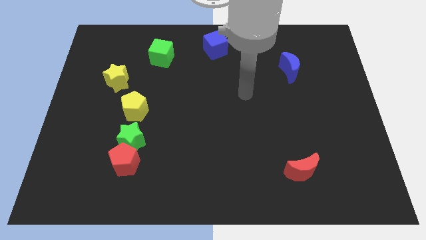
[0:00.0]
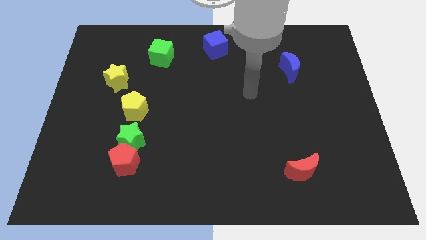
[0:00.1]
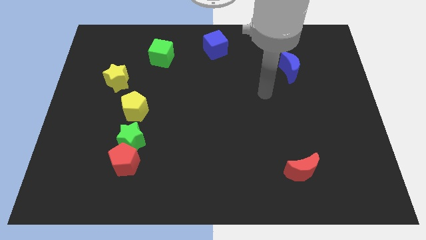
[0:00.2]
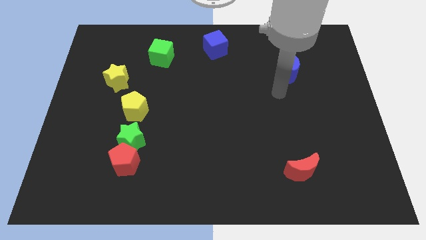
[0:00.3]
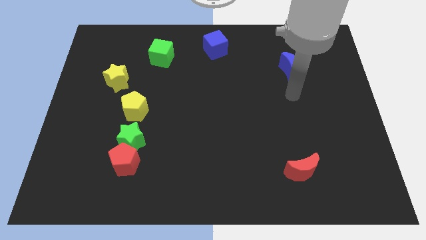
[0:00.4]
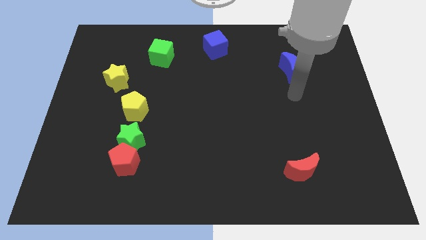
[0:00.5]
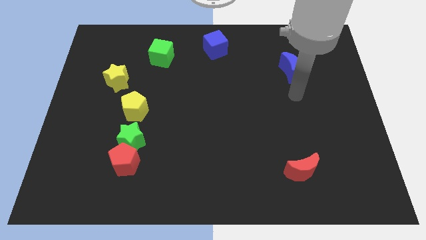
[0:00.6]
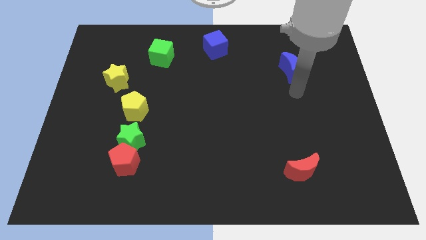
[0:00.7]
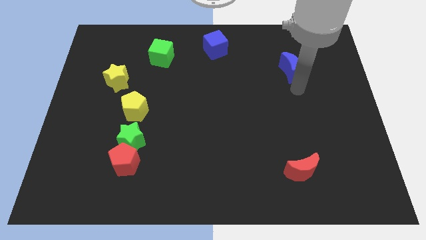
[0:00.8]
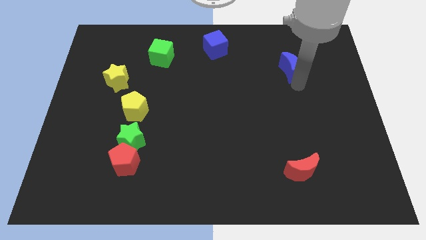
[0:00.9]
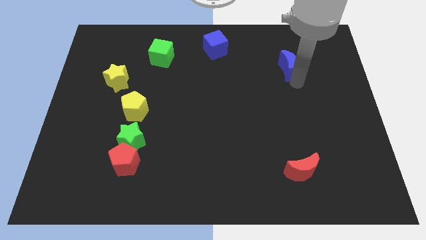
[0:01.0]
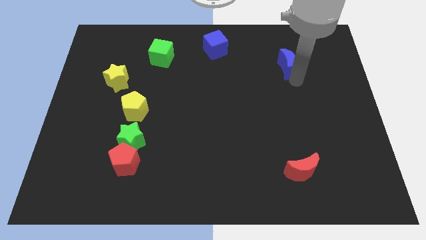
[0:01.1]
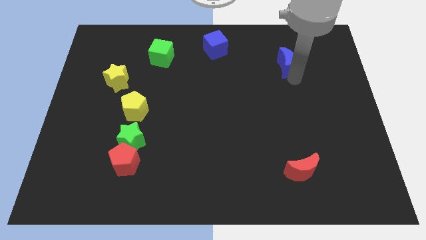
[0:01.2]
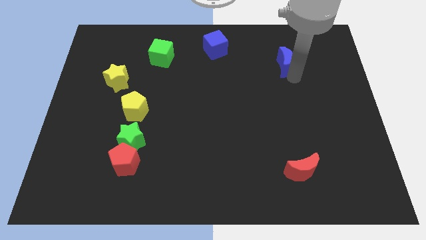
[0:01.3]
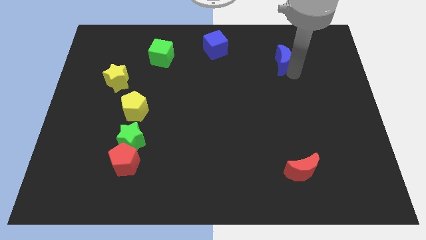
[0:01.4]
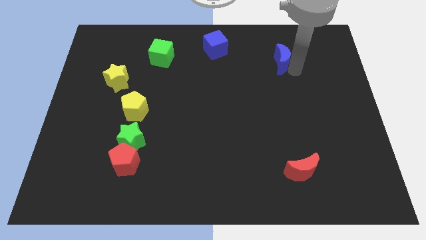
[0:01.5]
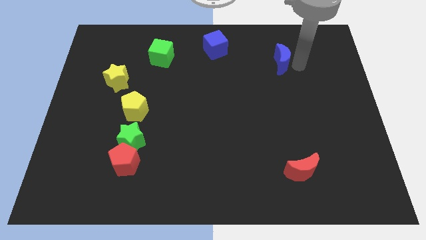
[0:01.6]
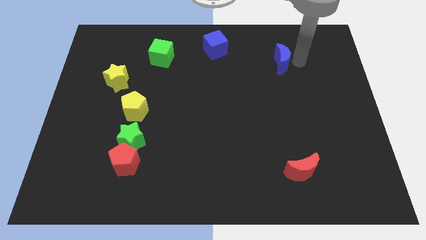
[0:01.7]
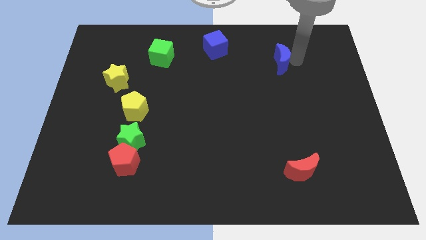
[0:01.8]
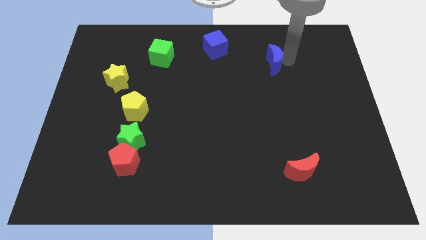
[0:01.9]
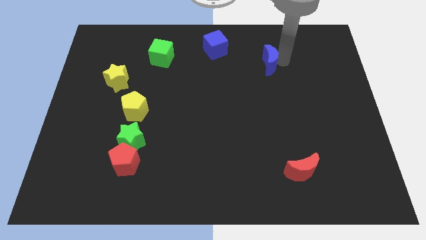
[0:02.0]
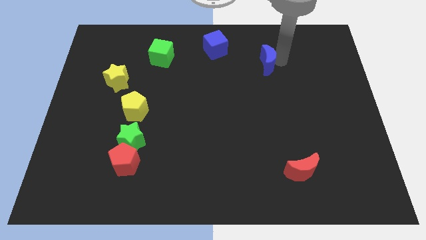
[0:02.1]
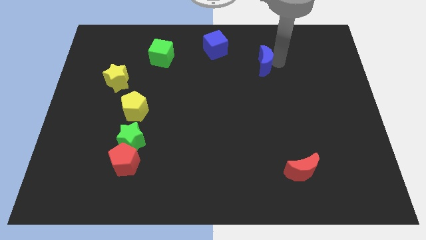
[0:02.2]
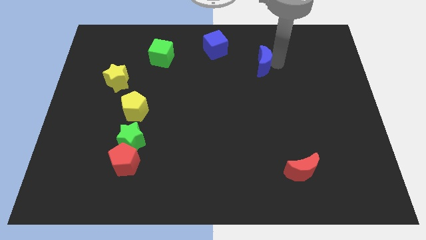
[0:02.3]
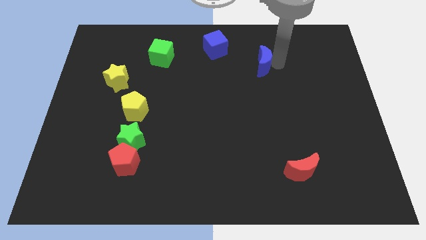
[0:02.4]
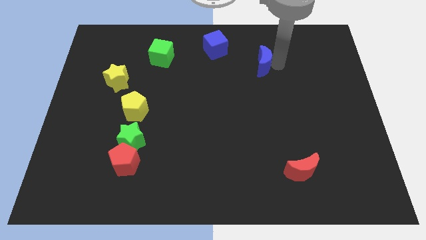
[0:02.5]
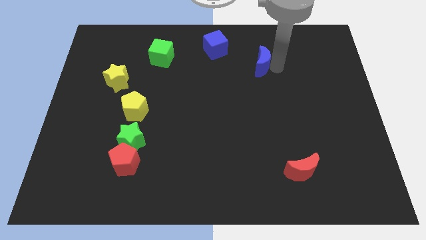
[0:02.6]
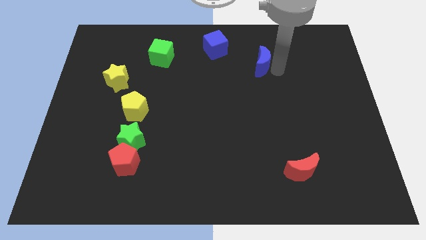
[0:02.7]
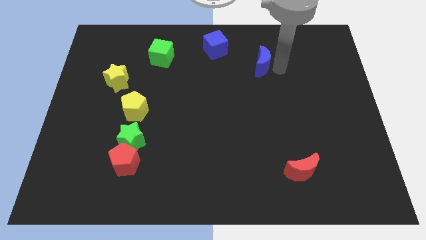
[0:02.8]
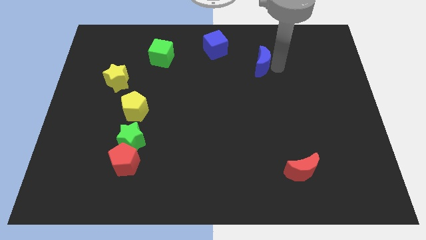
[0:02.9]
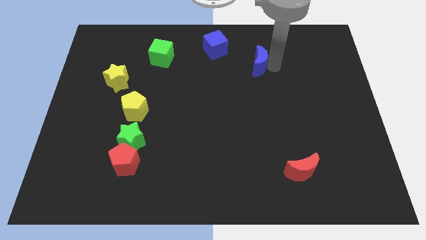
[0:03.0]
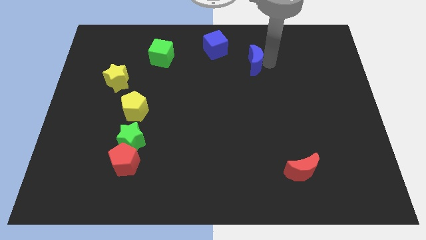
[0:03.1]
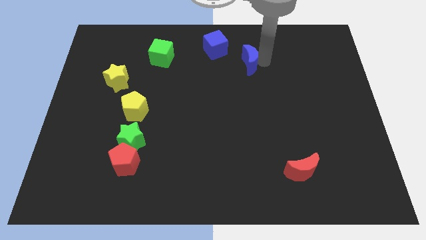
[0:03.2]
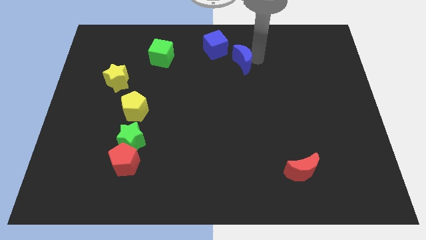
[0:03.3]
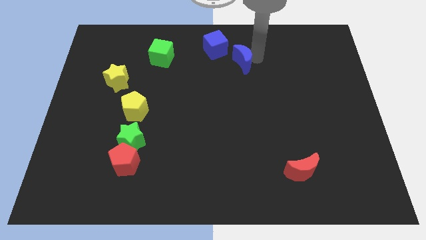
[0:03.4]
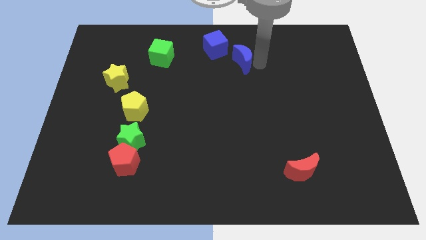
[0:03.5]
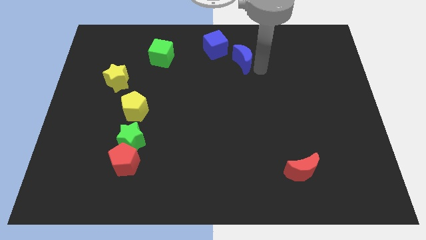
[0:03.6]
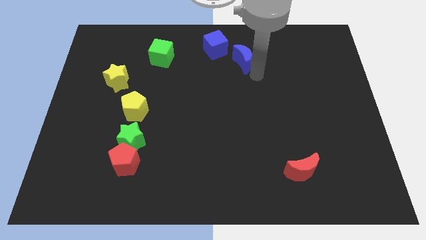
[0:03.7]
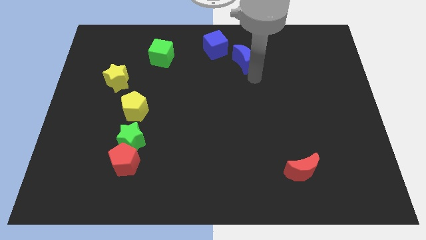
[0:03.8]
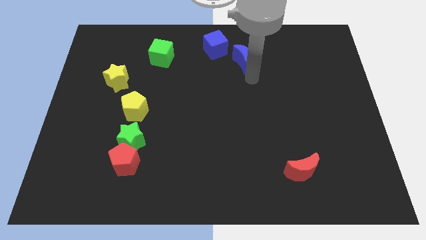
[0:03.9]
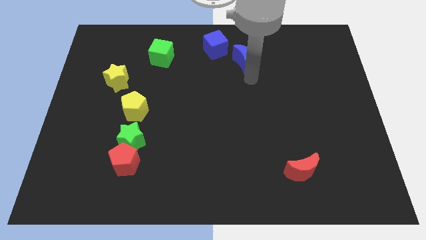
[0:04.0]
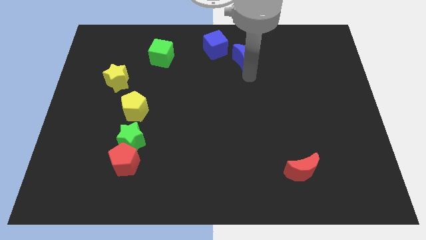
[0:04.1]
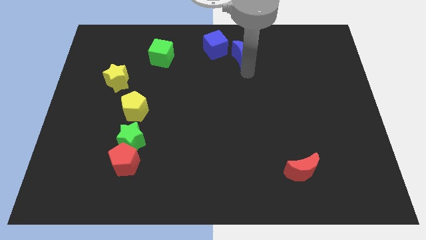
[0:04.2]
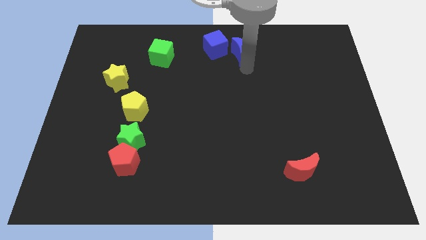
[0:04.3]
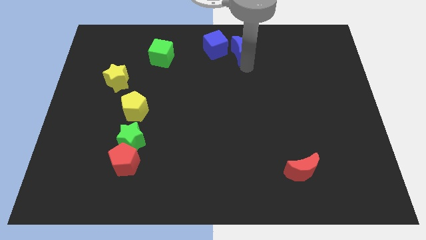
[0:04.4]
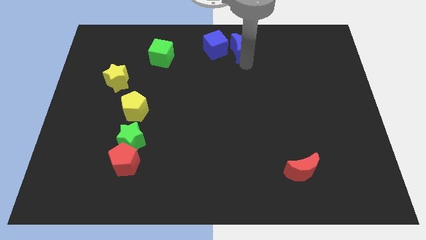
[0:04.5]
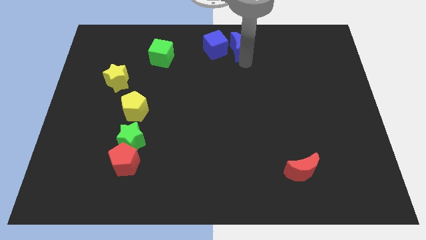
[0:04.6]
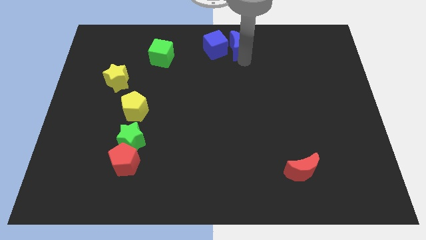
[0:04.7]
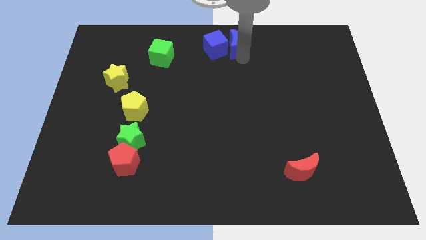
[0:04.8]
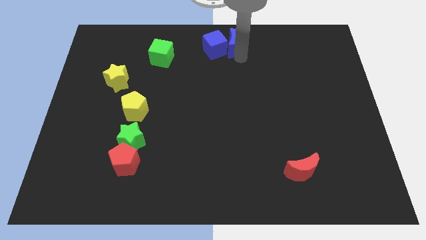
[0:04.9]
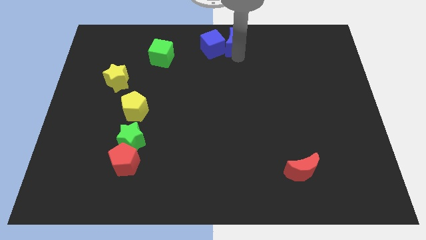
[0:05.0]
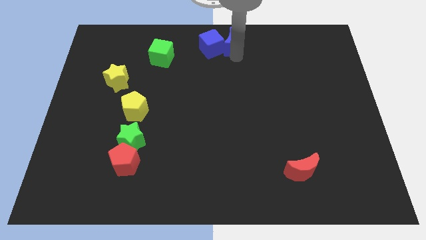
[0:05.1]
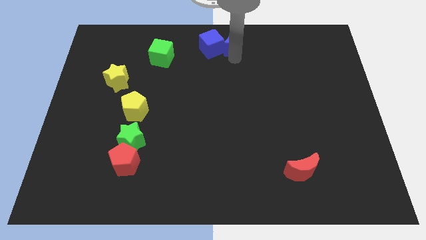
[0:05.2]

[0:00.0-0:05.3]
push the blue moon right to the blue square

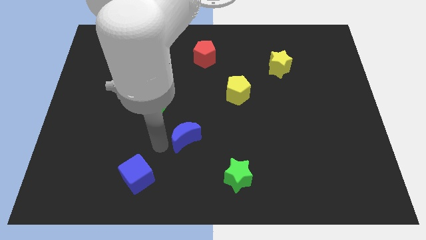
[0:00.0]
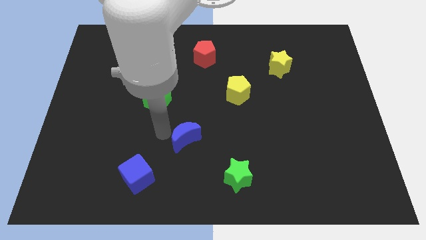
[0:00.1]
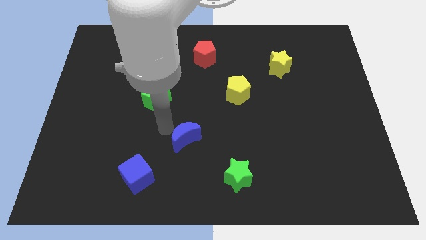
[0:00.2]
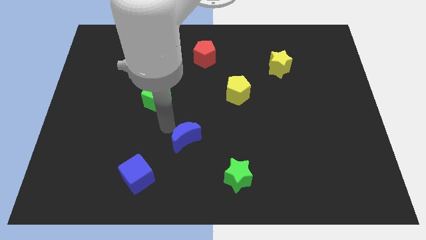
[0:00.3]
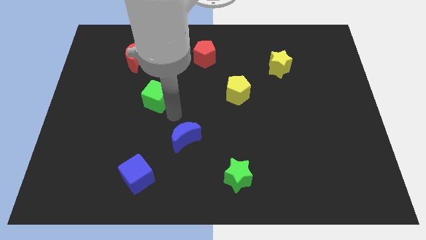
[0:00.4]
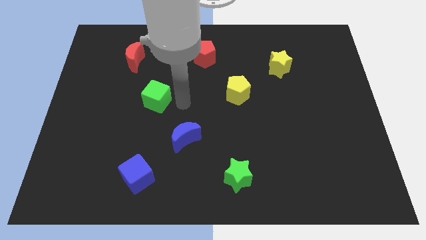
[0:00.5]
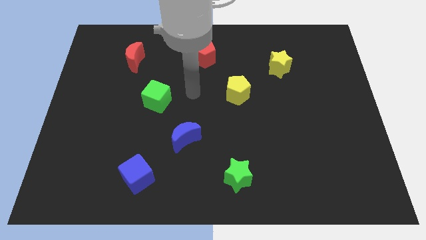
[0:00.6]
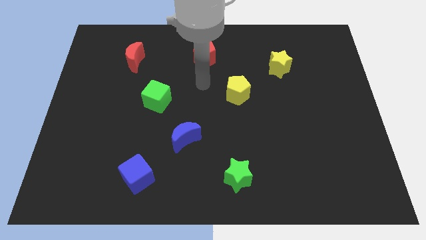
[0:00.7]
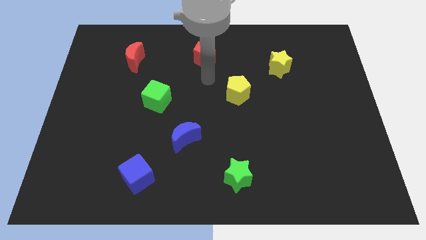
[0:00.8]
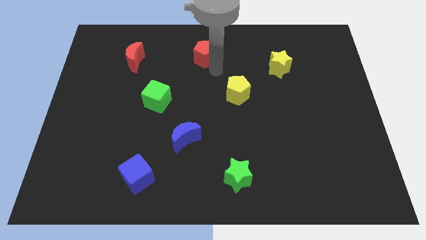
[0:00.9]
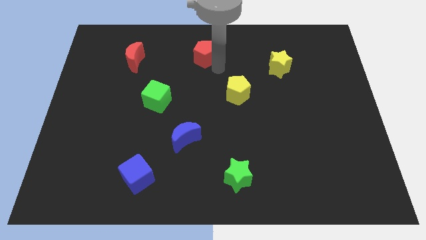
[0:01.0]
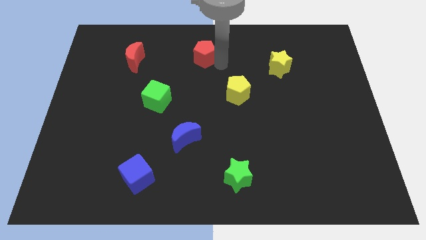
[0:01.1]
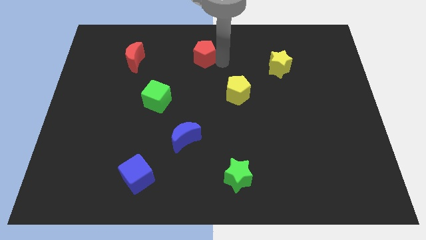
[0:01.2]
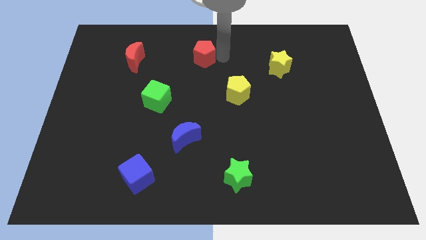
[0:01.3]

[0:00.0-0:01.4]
point your arm at the right of the red pentagon

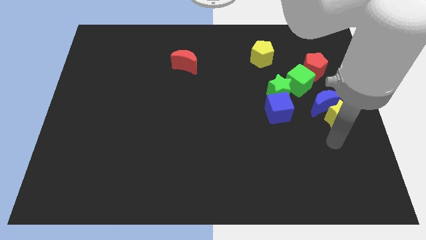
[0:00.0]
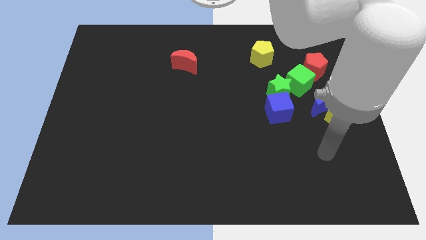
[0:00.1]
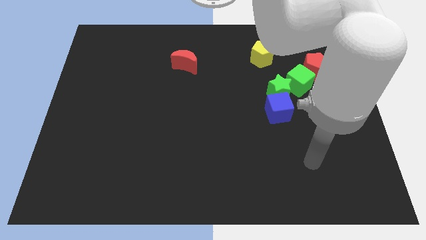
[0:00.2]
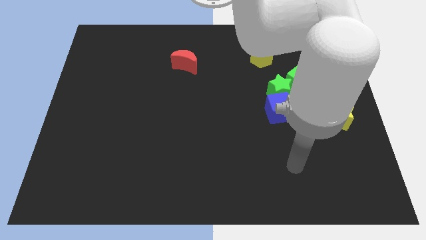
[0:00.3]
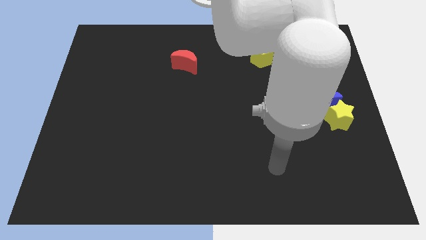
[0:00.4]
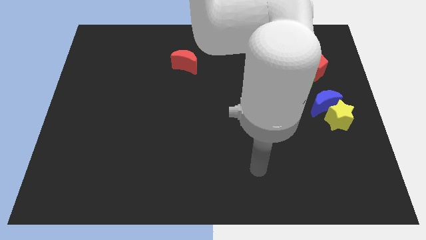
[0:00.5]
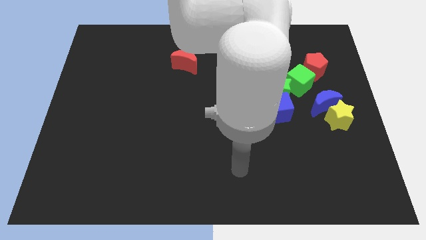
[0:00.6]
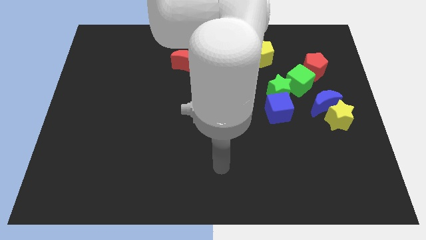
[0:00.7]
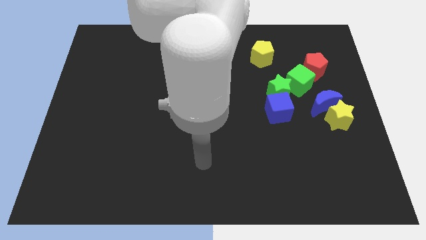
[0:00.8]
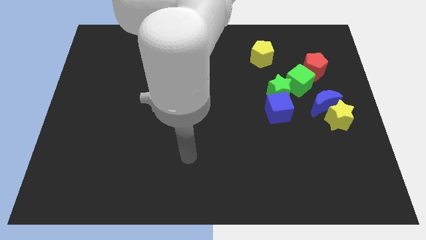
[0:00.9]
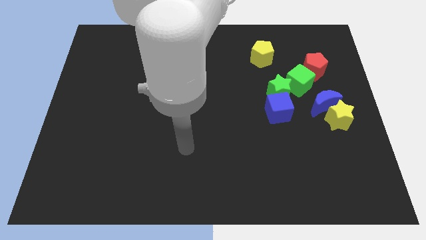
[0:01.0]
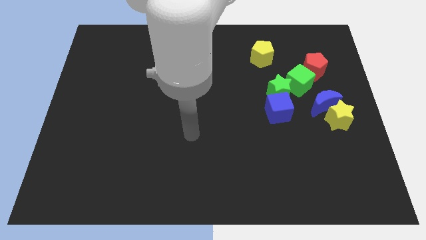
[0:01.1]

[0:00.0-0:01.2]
move your hand to the bottom center of the board

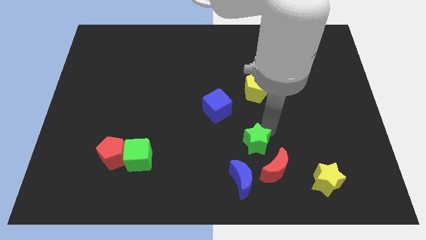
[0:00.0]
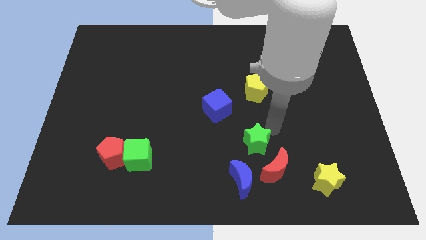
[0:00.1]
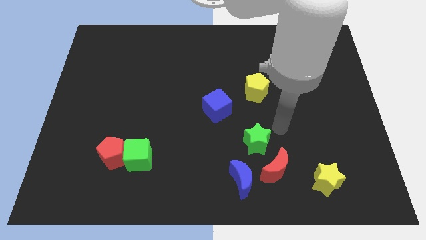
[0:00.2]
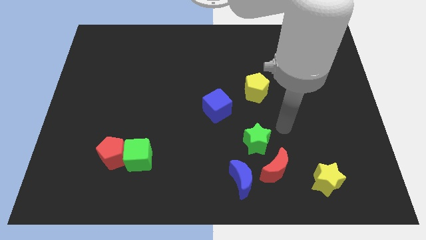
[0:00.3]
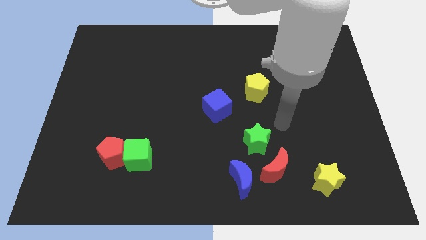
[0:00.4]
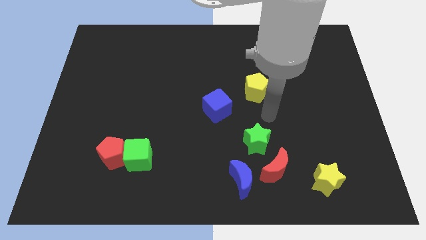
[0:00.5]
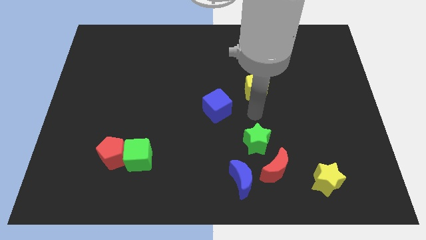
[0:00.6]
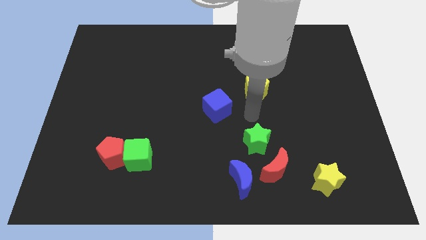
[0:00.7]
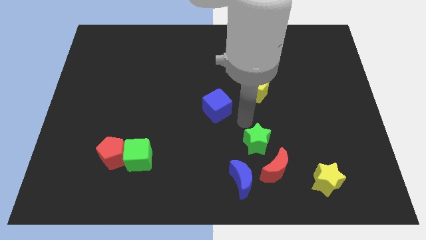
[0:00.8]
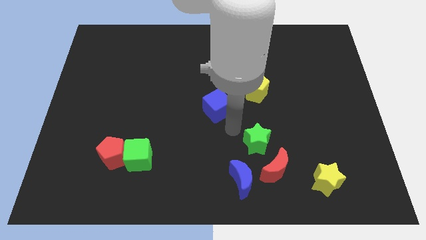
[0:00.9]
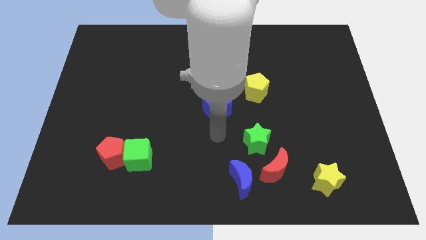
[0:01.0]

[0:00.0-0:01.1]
point your arm at the bottom side of the blue cube
